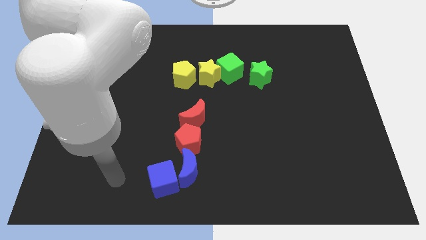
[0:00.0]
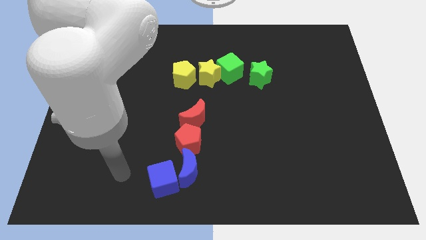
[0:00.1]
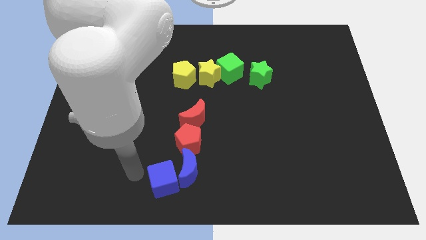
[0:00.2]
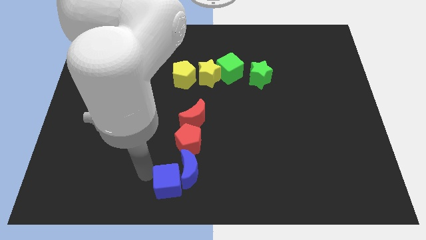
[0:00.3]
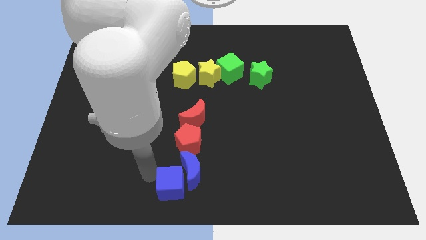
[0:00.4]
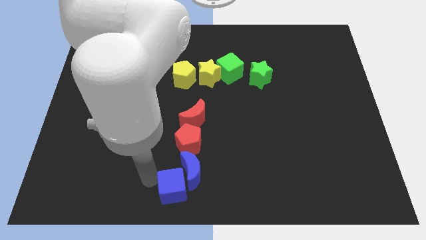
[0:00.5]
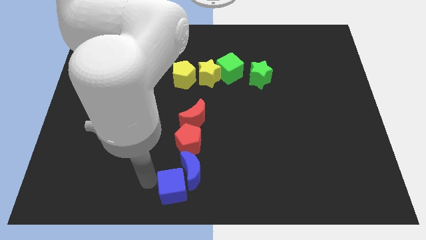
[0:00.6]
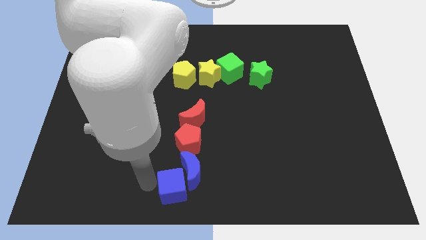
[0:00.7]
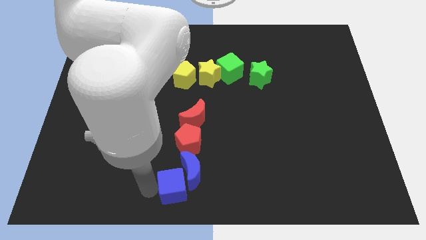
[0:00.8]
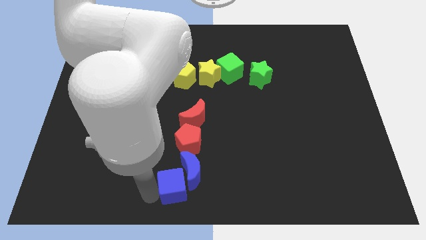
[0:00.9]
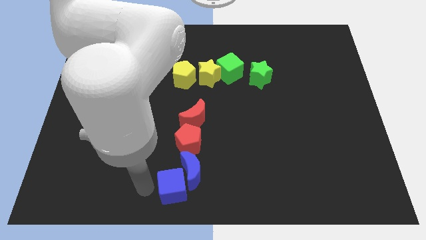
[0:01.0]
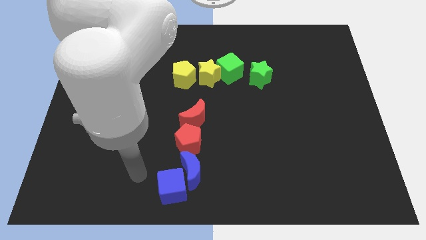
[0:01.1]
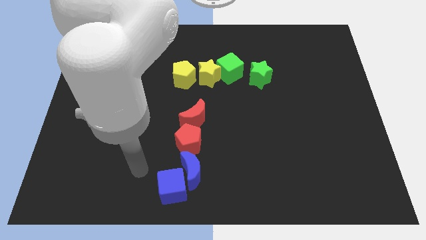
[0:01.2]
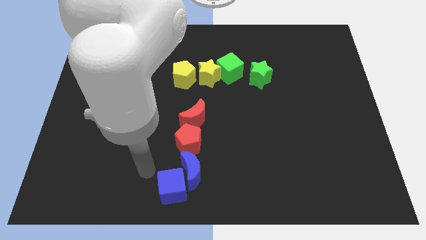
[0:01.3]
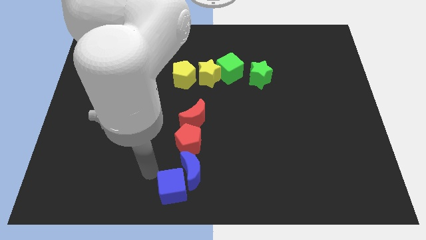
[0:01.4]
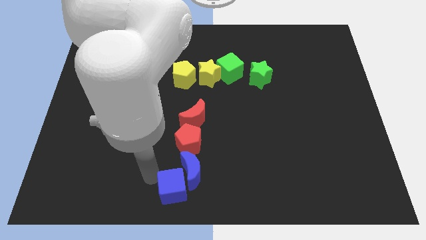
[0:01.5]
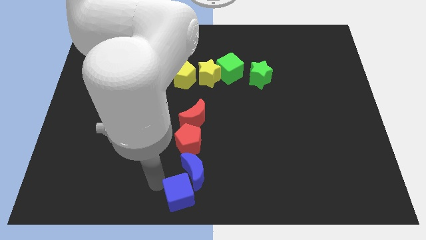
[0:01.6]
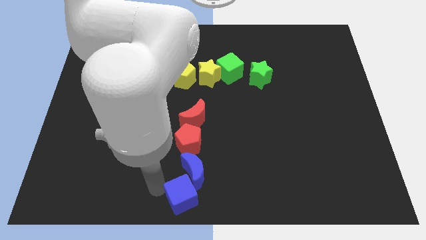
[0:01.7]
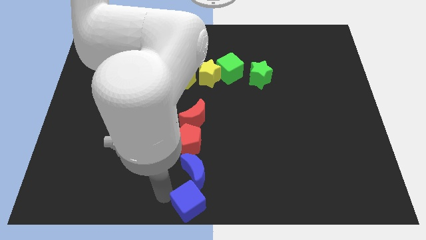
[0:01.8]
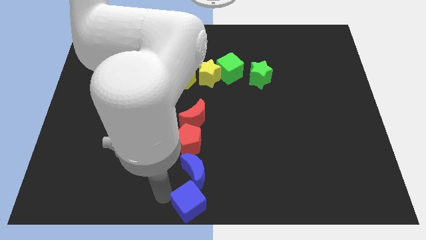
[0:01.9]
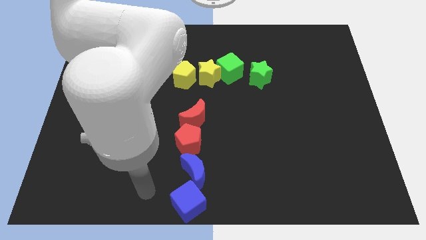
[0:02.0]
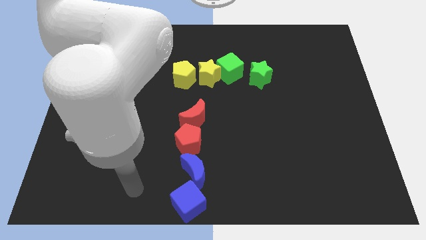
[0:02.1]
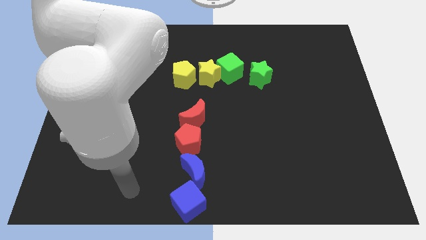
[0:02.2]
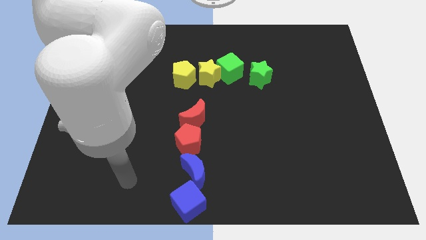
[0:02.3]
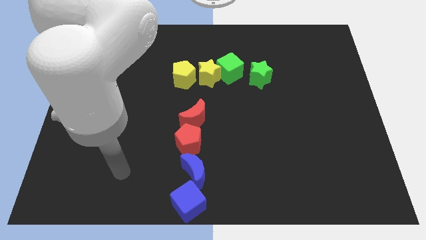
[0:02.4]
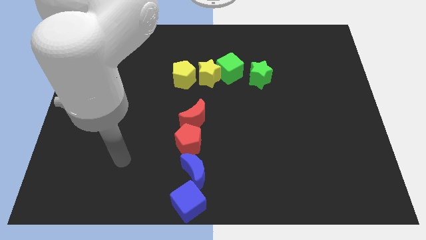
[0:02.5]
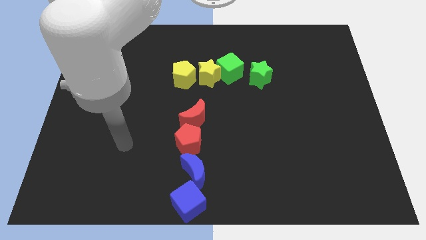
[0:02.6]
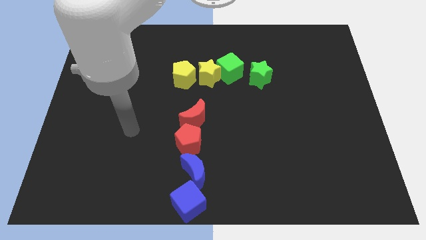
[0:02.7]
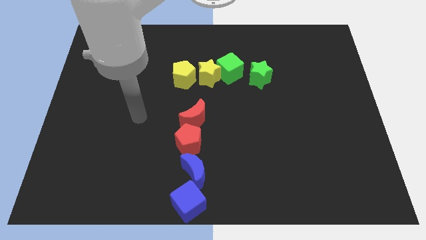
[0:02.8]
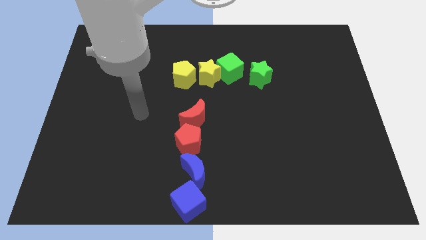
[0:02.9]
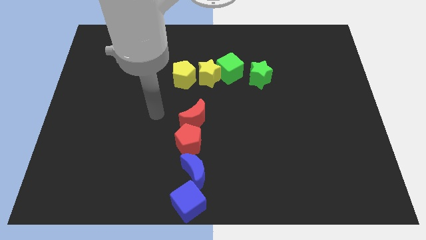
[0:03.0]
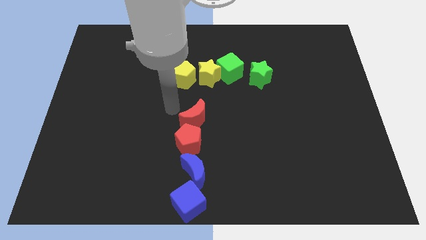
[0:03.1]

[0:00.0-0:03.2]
move the blue cube to the bottom of the blue crescent

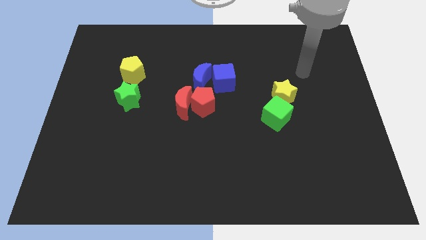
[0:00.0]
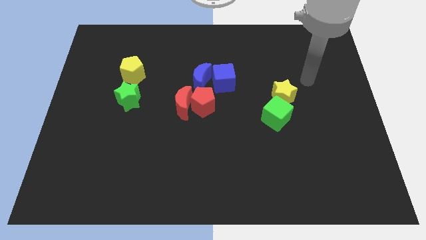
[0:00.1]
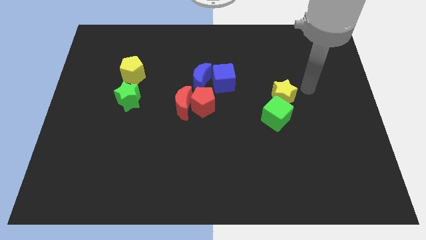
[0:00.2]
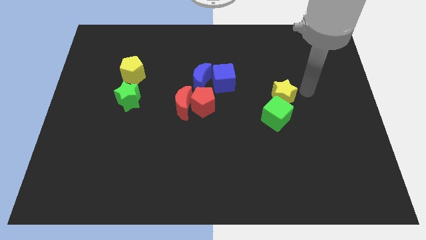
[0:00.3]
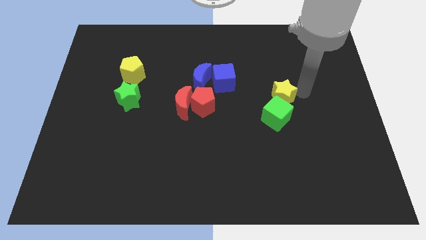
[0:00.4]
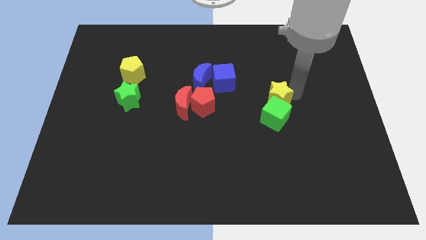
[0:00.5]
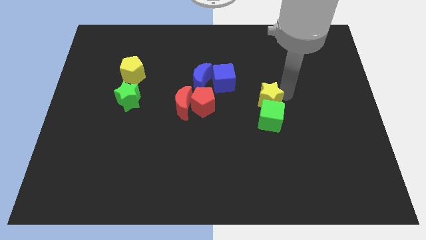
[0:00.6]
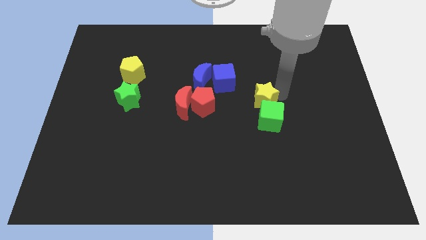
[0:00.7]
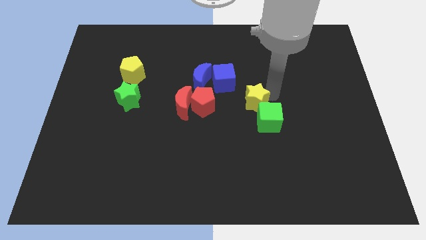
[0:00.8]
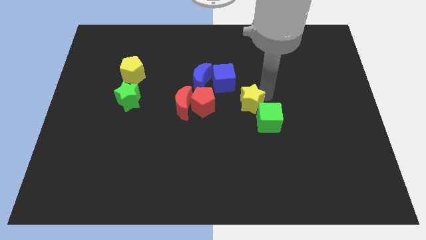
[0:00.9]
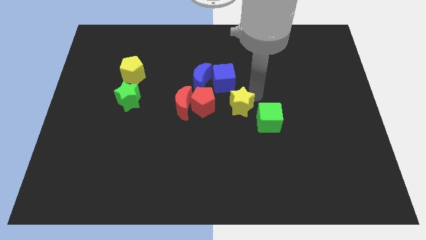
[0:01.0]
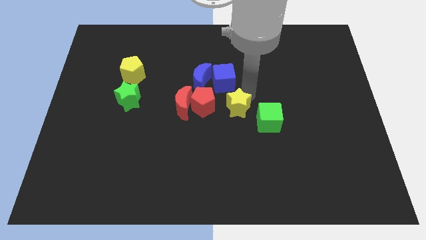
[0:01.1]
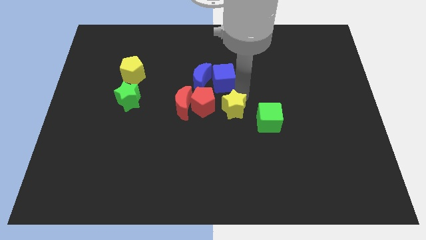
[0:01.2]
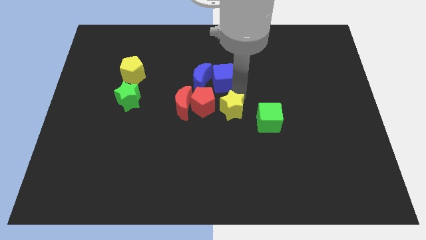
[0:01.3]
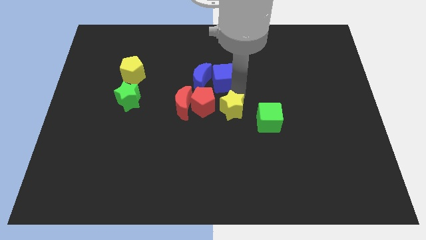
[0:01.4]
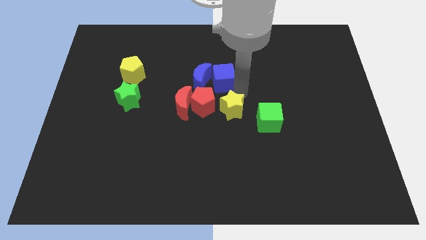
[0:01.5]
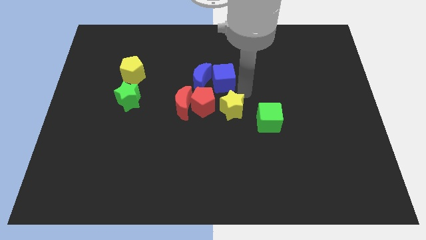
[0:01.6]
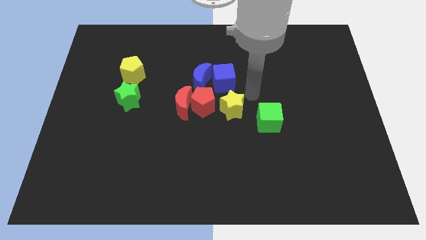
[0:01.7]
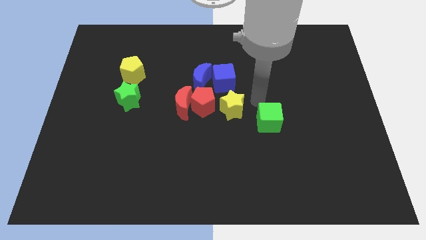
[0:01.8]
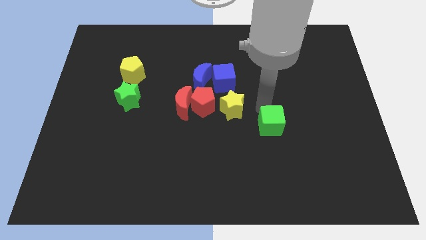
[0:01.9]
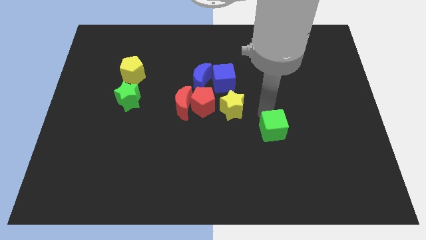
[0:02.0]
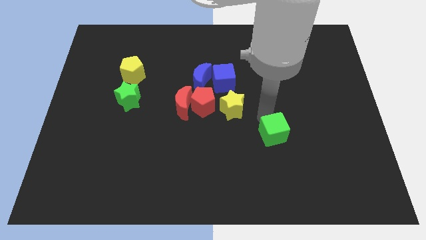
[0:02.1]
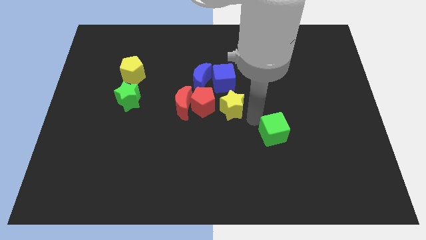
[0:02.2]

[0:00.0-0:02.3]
place the yellow star to the right of the red pentagon

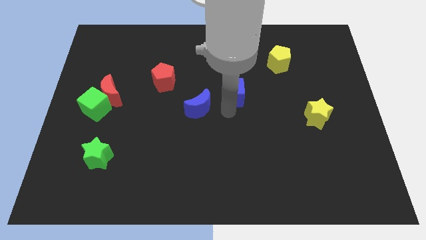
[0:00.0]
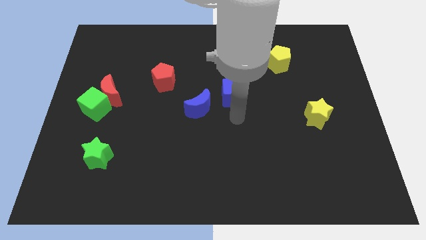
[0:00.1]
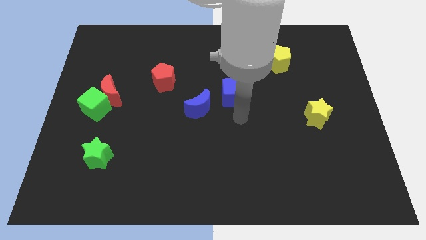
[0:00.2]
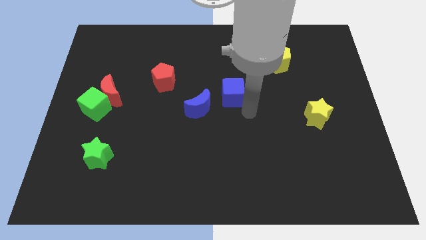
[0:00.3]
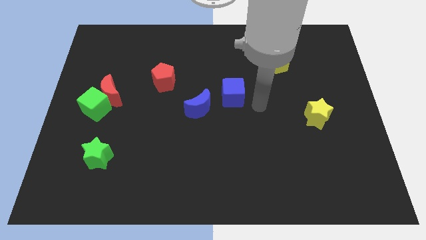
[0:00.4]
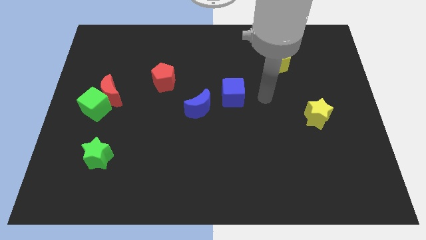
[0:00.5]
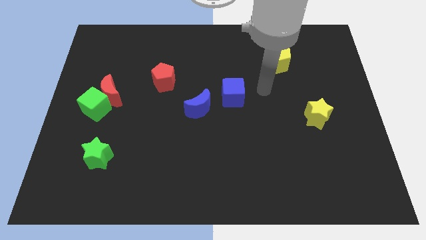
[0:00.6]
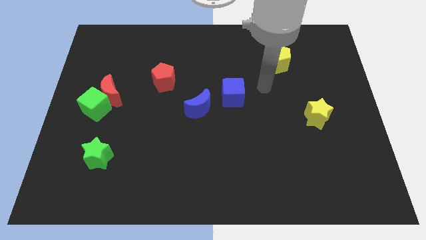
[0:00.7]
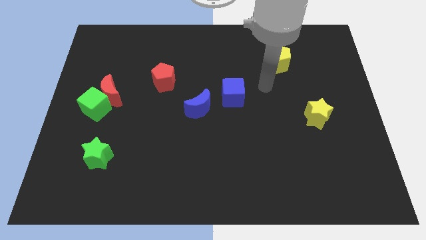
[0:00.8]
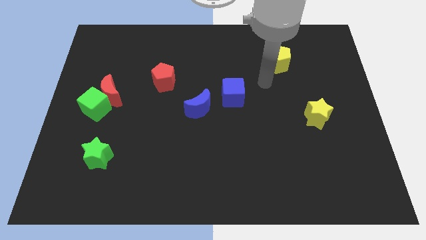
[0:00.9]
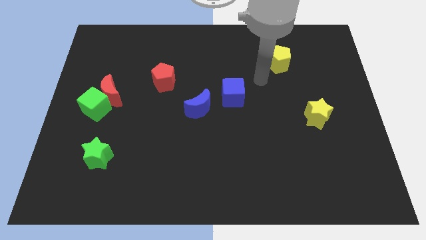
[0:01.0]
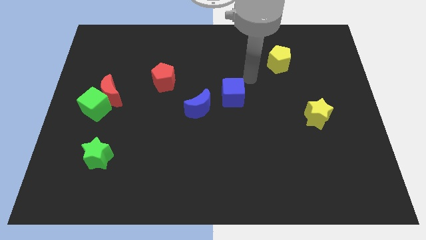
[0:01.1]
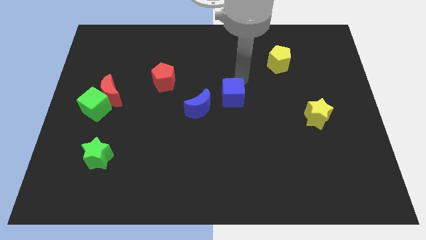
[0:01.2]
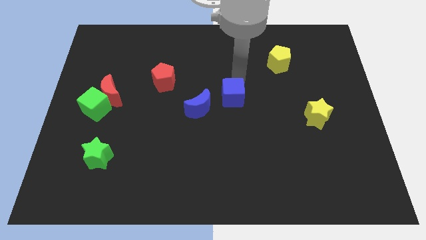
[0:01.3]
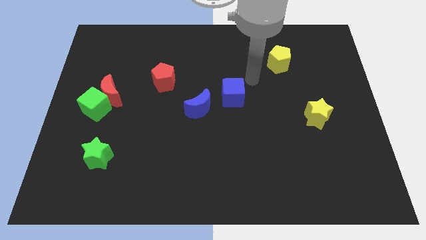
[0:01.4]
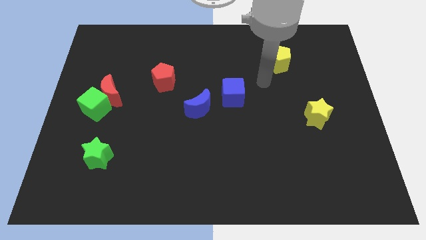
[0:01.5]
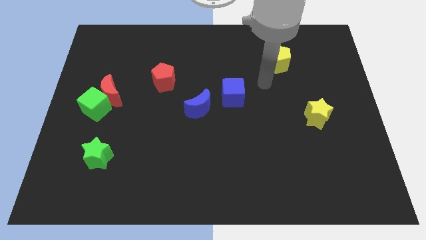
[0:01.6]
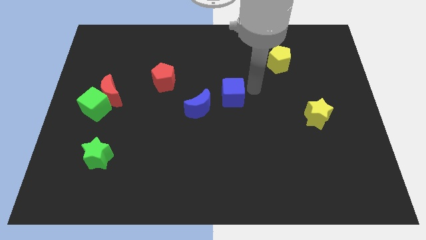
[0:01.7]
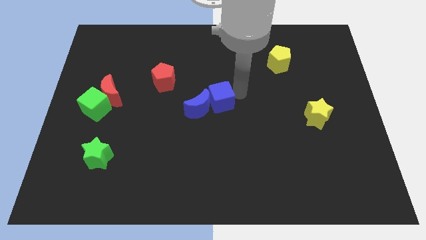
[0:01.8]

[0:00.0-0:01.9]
move the blue cube to the right of the blue crescent

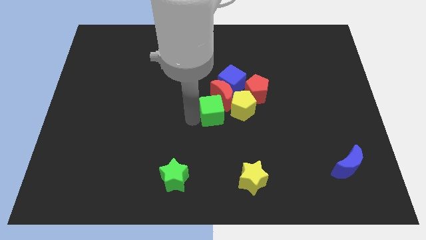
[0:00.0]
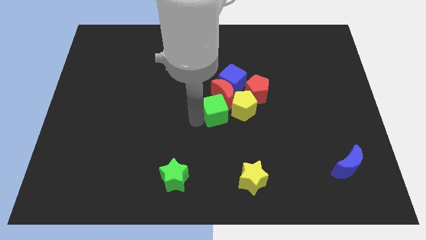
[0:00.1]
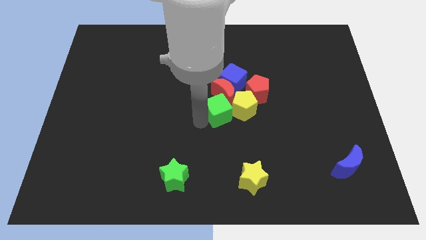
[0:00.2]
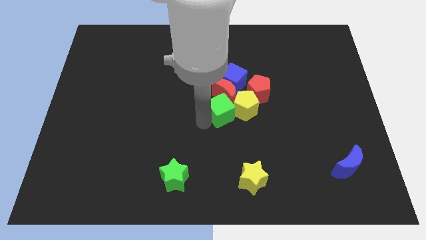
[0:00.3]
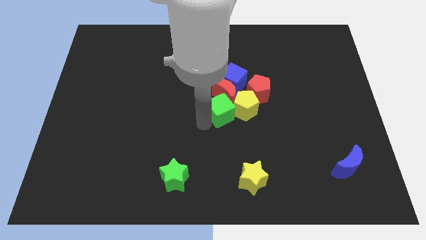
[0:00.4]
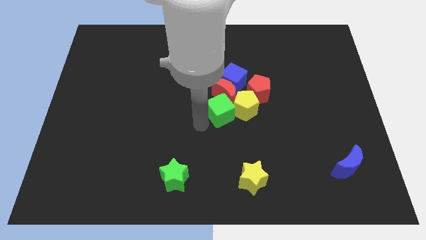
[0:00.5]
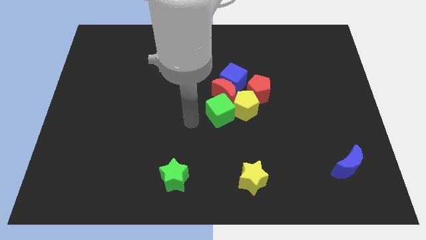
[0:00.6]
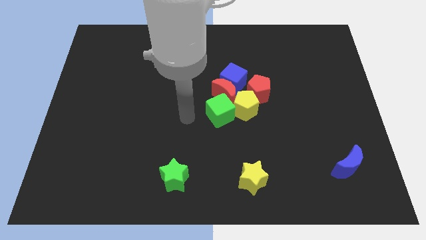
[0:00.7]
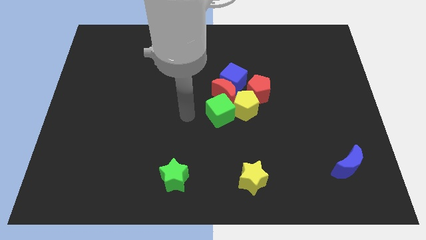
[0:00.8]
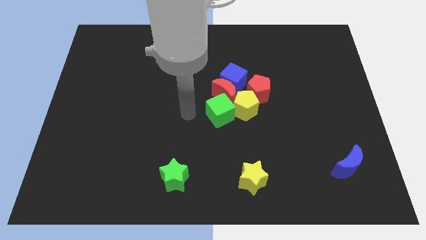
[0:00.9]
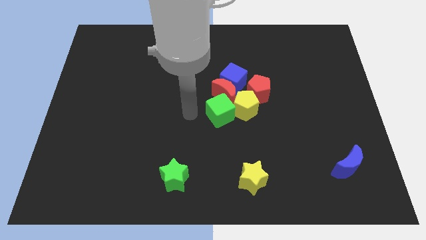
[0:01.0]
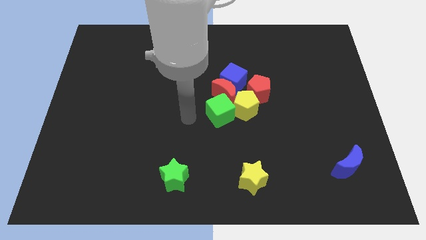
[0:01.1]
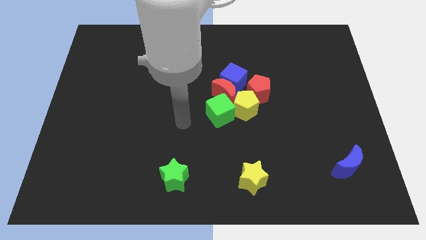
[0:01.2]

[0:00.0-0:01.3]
move your arm away from the green cube

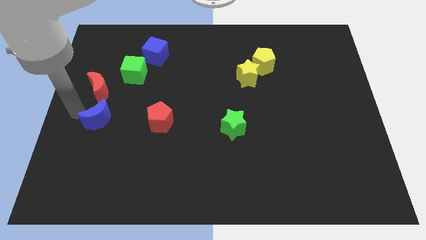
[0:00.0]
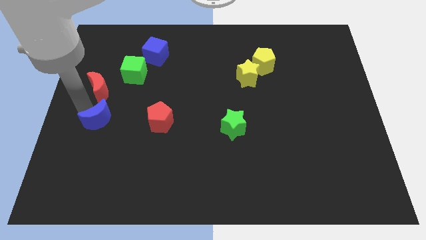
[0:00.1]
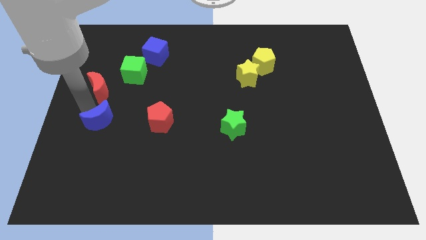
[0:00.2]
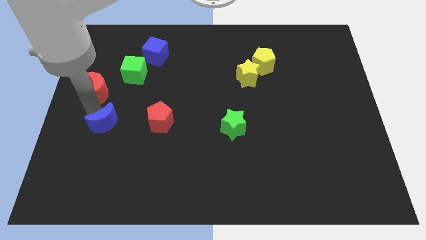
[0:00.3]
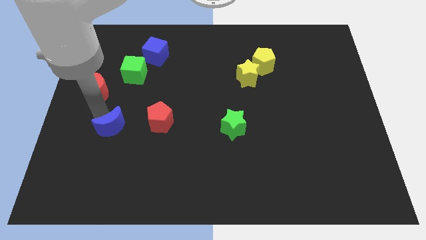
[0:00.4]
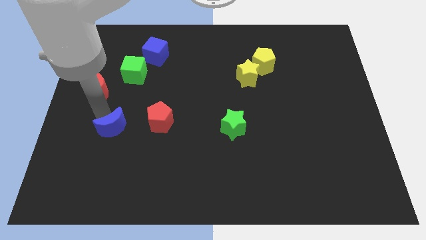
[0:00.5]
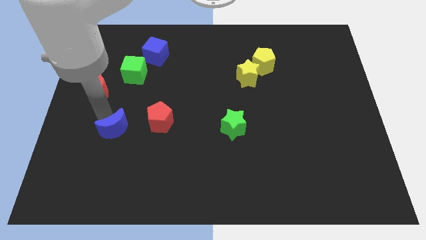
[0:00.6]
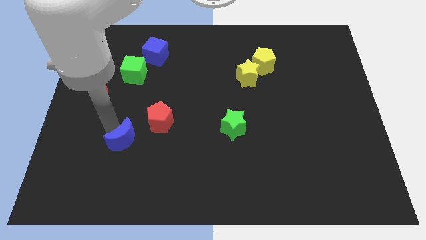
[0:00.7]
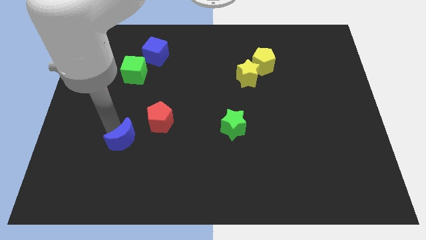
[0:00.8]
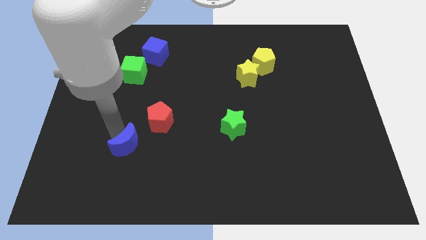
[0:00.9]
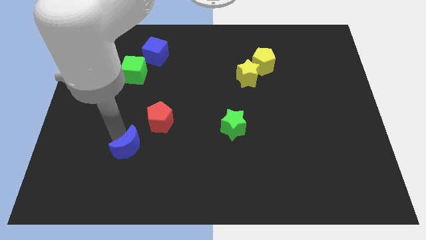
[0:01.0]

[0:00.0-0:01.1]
push the blue crescent to the bottom left of the red pentagon
